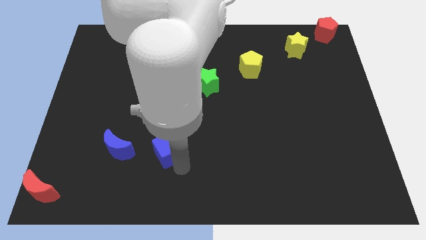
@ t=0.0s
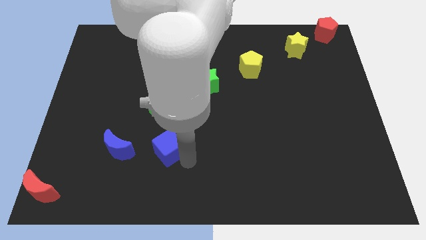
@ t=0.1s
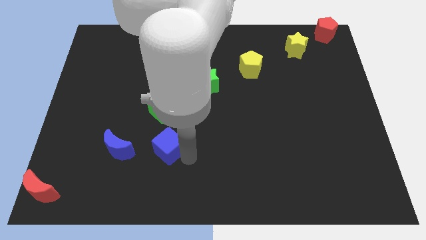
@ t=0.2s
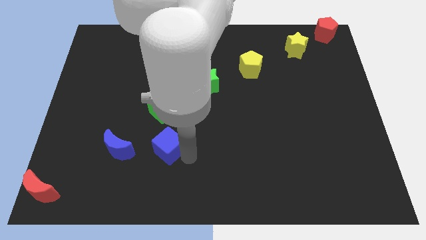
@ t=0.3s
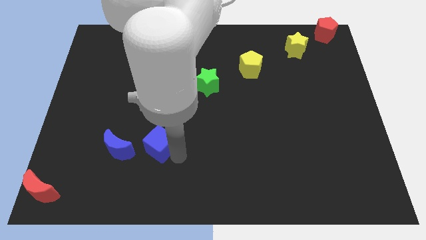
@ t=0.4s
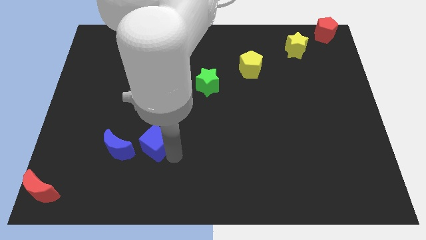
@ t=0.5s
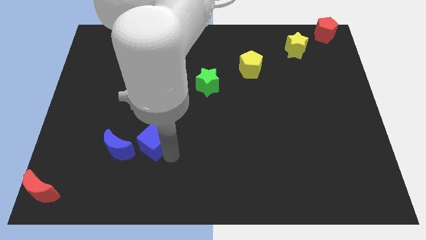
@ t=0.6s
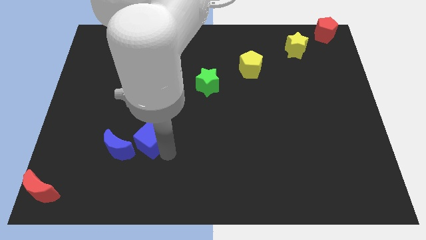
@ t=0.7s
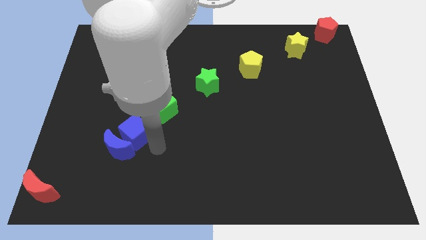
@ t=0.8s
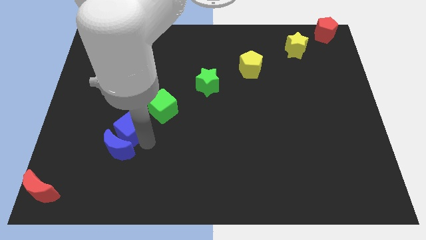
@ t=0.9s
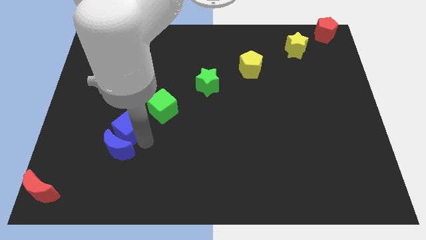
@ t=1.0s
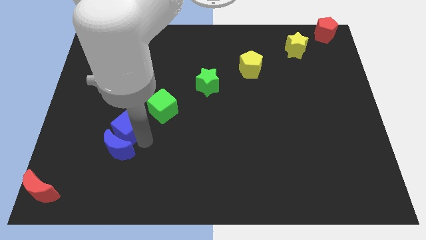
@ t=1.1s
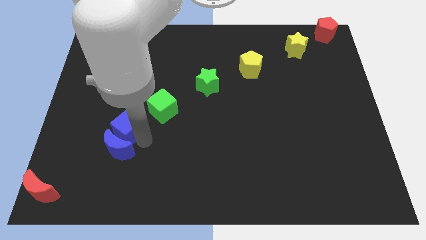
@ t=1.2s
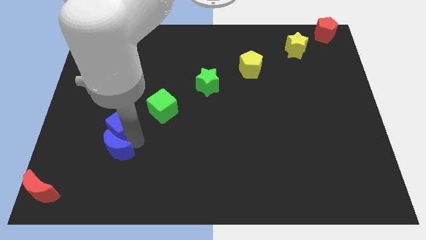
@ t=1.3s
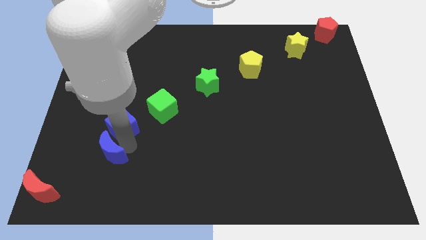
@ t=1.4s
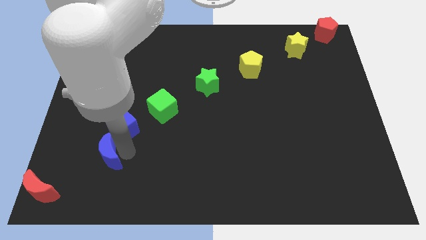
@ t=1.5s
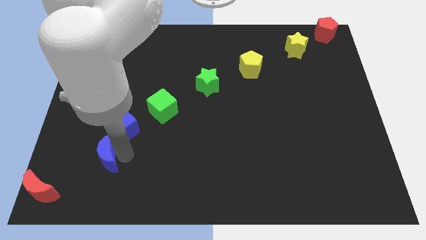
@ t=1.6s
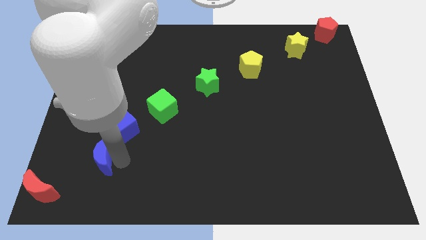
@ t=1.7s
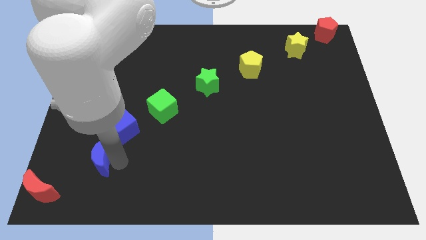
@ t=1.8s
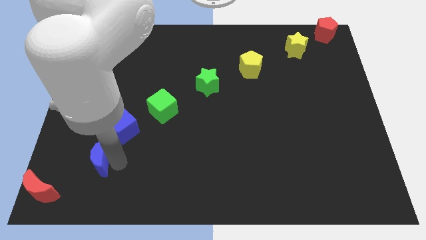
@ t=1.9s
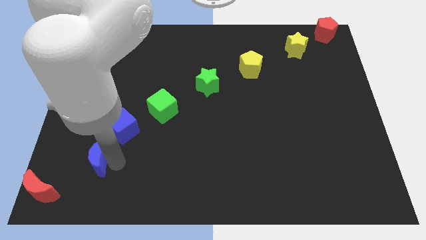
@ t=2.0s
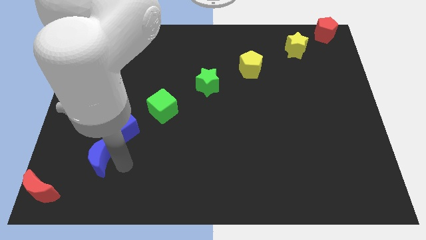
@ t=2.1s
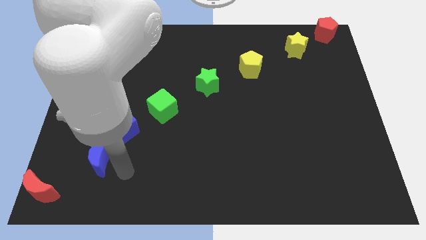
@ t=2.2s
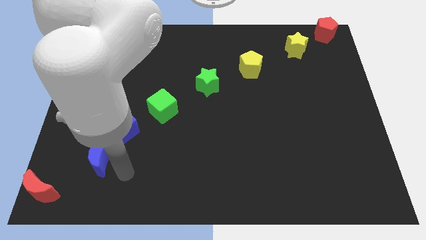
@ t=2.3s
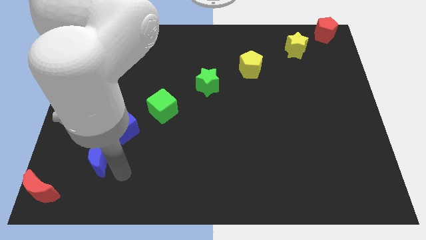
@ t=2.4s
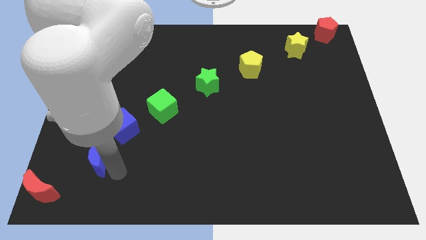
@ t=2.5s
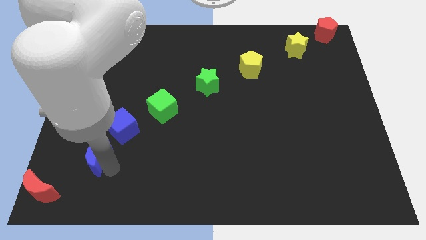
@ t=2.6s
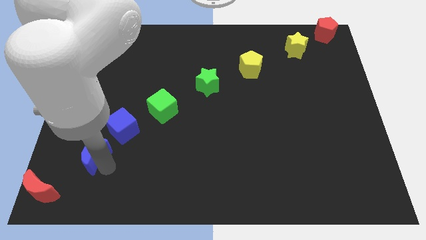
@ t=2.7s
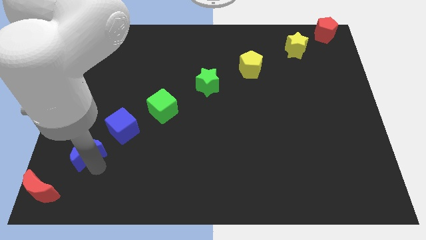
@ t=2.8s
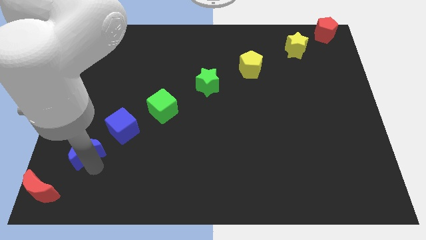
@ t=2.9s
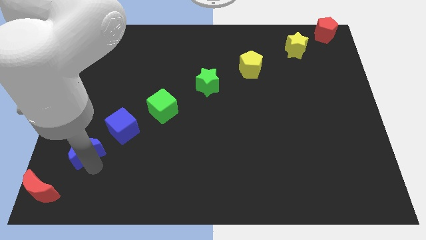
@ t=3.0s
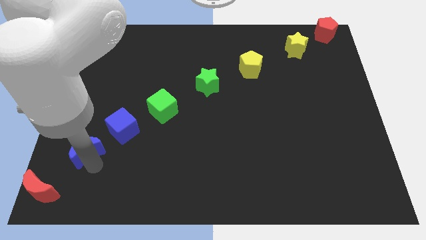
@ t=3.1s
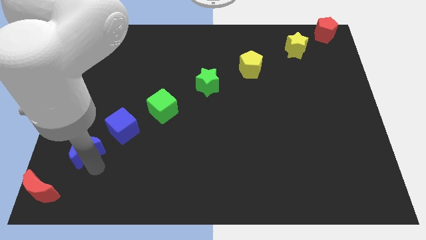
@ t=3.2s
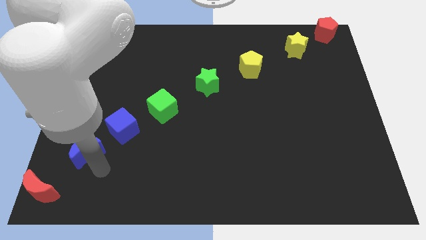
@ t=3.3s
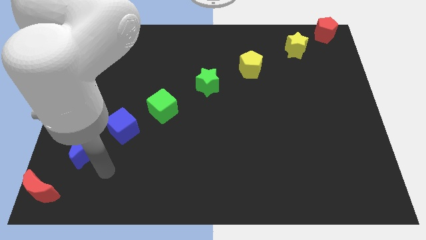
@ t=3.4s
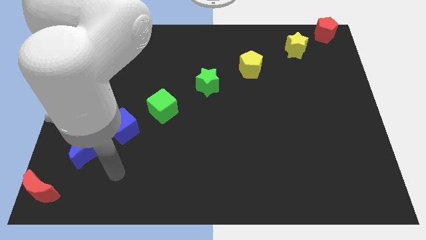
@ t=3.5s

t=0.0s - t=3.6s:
adjust both the blue blocks diagonally on the top right side of the red crescent

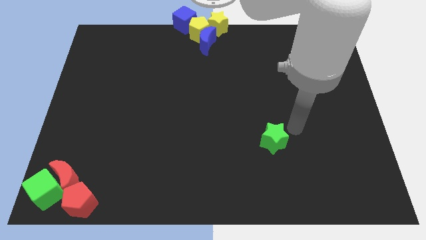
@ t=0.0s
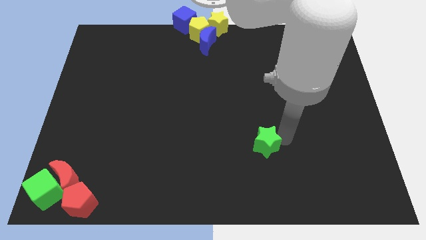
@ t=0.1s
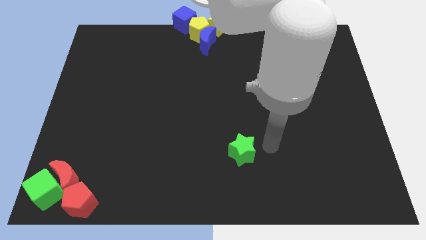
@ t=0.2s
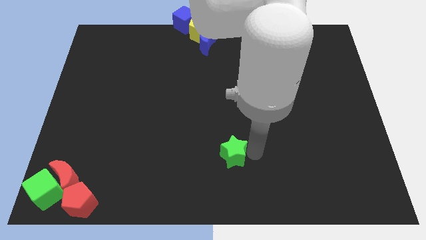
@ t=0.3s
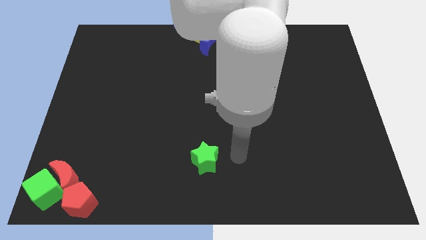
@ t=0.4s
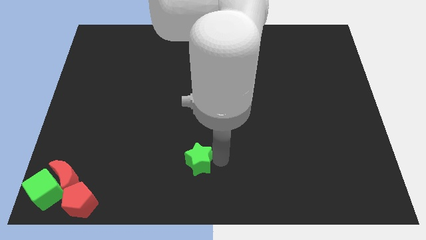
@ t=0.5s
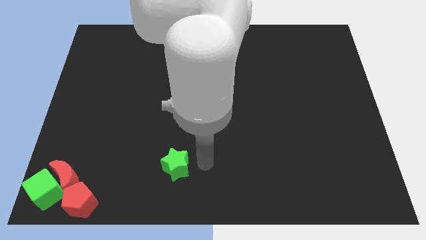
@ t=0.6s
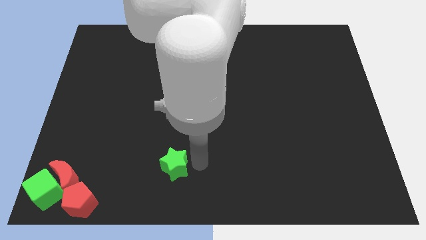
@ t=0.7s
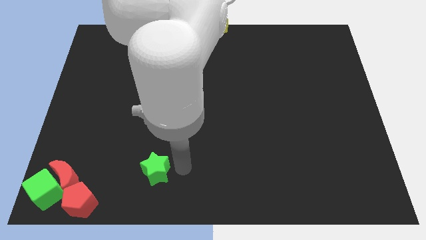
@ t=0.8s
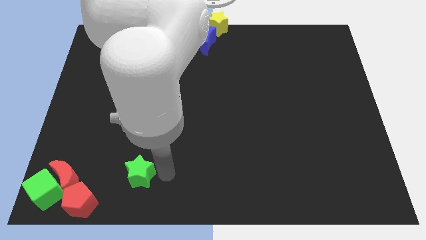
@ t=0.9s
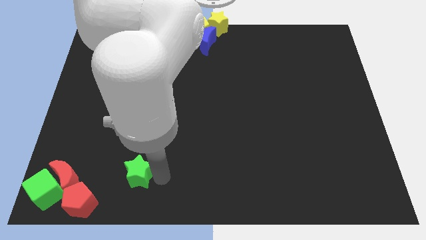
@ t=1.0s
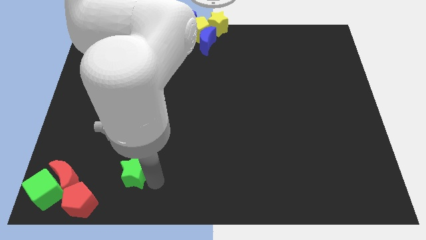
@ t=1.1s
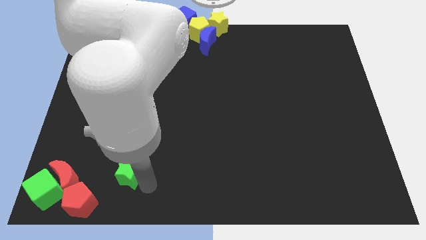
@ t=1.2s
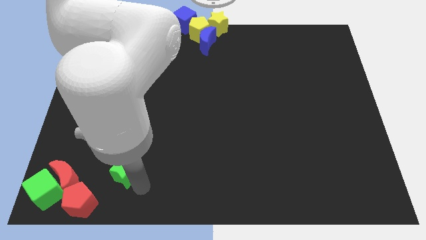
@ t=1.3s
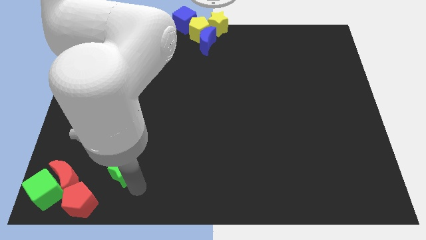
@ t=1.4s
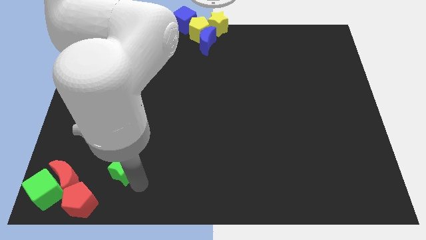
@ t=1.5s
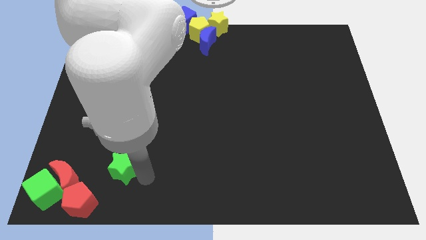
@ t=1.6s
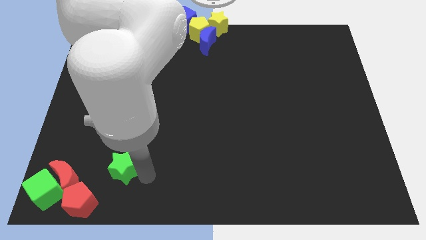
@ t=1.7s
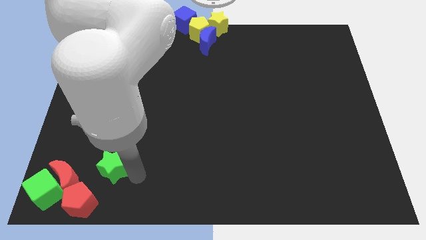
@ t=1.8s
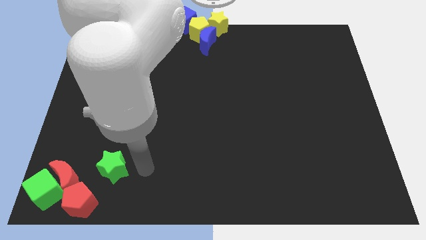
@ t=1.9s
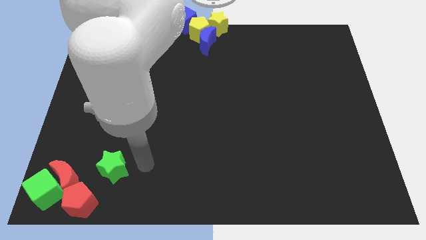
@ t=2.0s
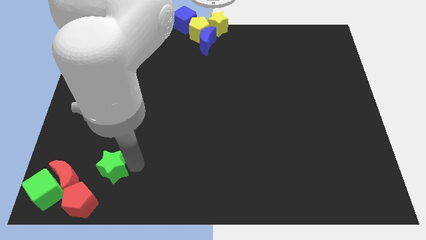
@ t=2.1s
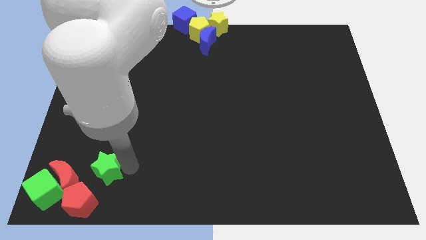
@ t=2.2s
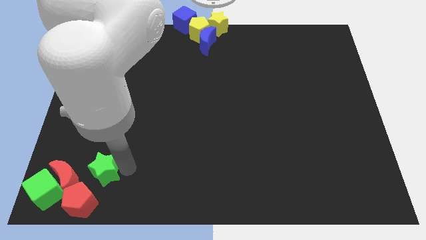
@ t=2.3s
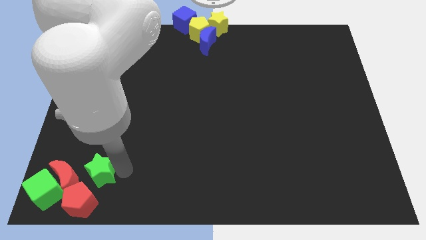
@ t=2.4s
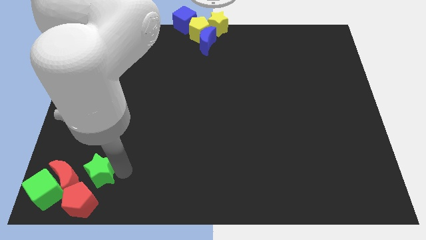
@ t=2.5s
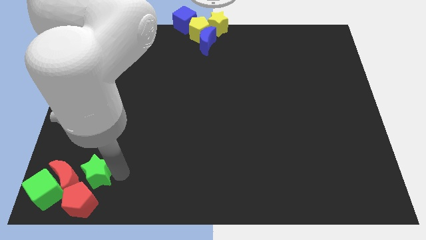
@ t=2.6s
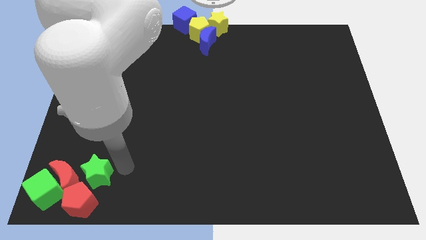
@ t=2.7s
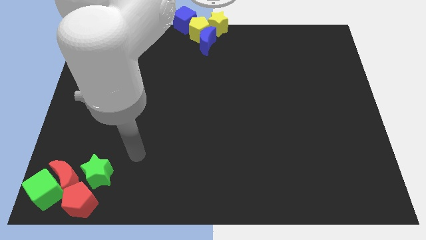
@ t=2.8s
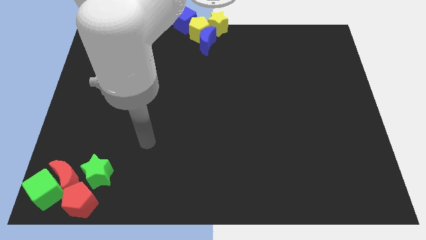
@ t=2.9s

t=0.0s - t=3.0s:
move green star towards the red crescent and red pentagon

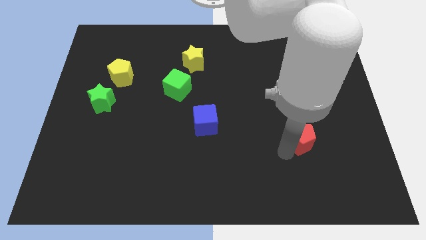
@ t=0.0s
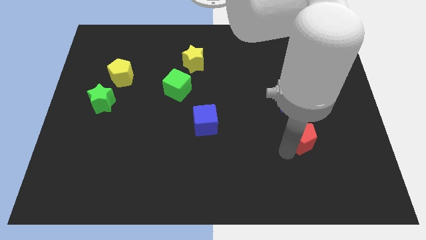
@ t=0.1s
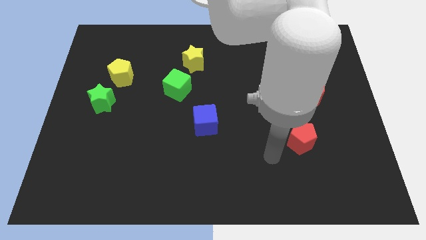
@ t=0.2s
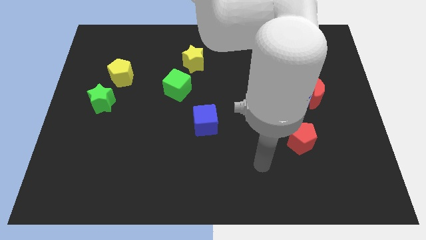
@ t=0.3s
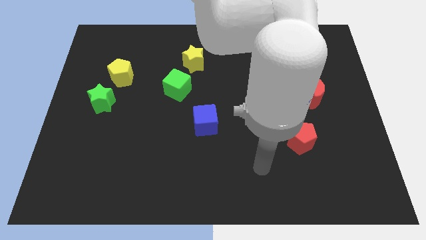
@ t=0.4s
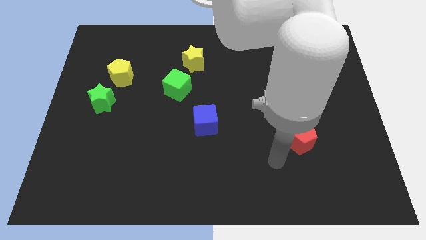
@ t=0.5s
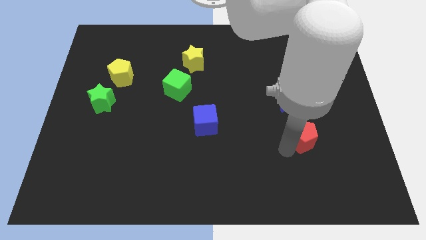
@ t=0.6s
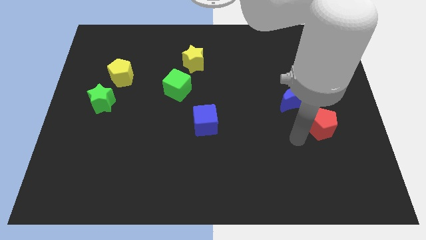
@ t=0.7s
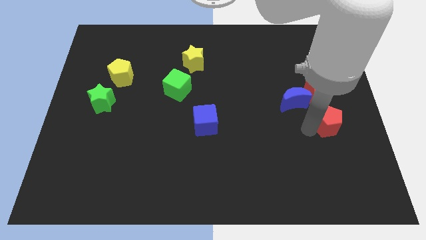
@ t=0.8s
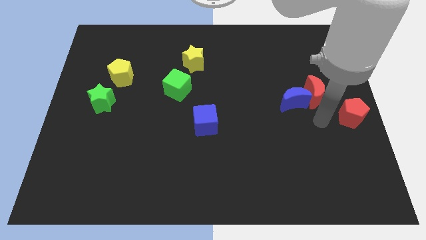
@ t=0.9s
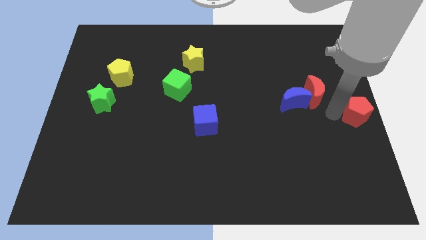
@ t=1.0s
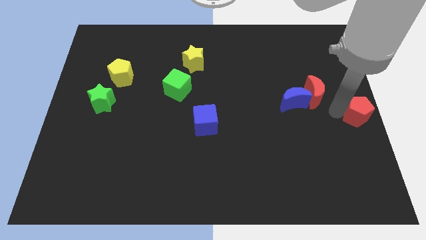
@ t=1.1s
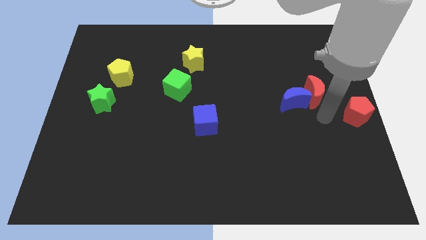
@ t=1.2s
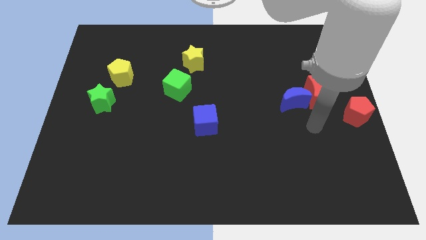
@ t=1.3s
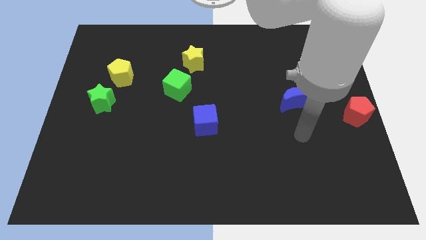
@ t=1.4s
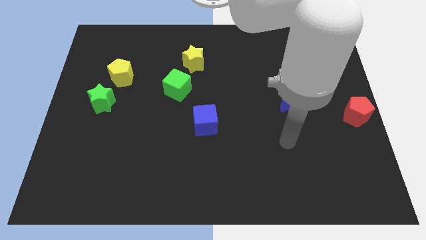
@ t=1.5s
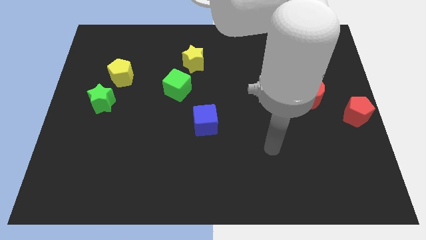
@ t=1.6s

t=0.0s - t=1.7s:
move the red pentagon to the center right of the board

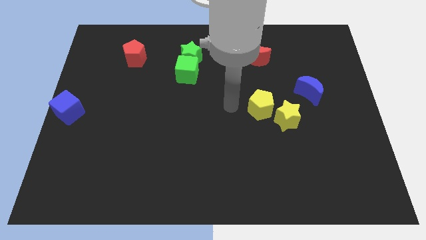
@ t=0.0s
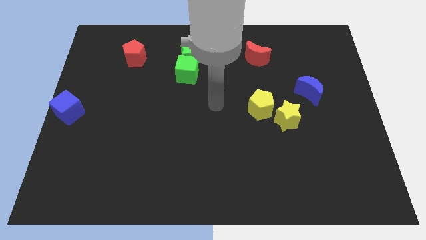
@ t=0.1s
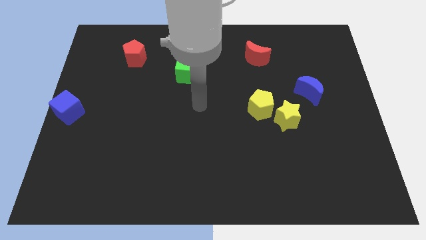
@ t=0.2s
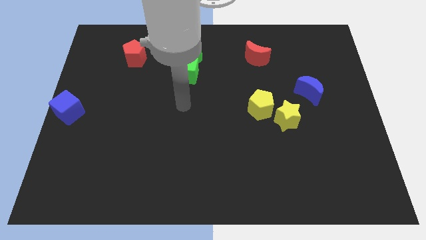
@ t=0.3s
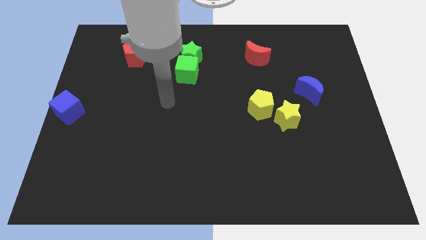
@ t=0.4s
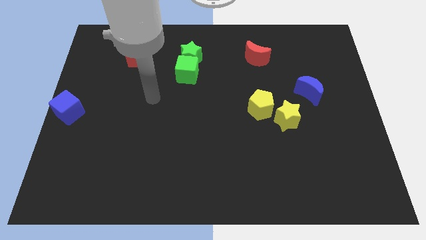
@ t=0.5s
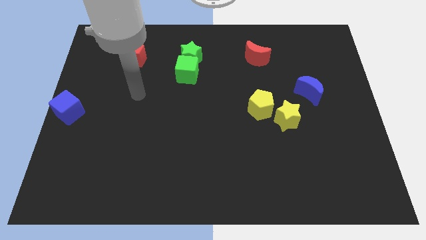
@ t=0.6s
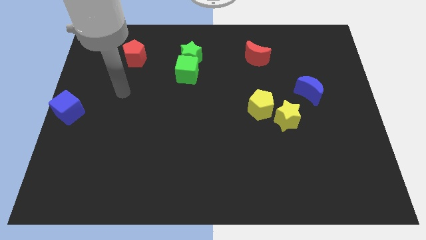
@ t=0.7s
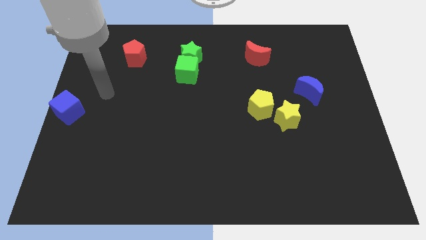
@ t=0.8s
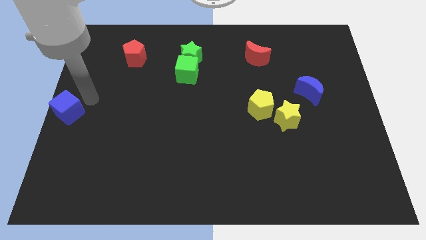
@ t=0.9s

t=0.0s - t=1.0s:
place arm on the right of blue cube
